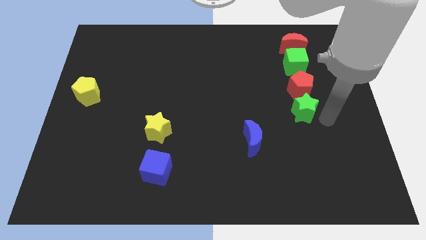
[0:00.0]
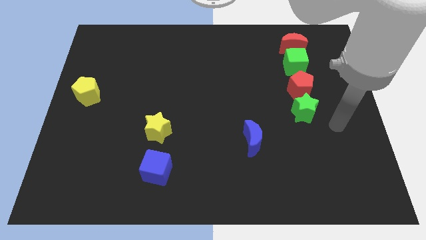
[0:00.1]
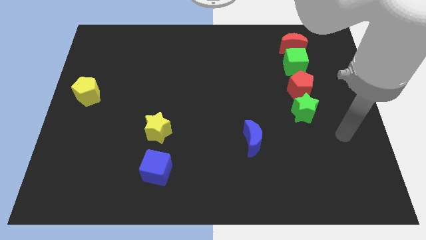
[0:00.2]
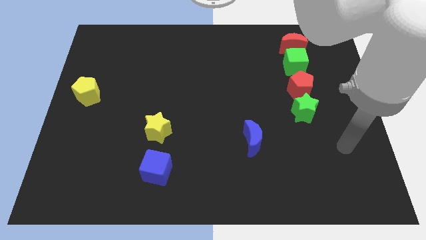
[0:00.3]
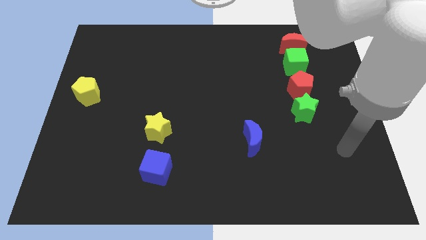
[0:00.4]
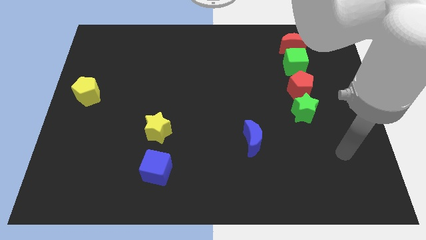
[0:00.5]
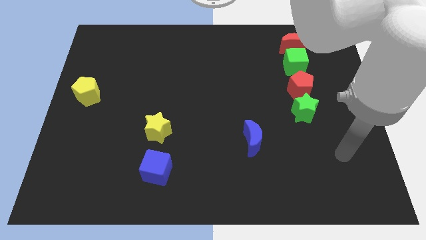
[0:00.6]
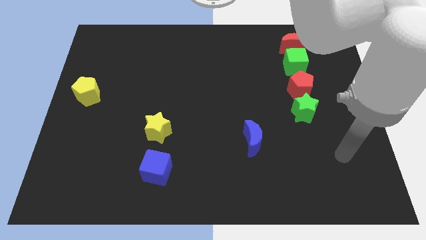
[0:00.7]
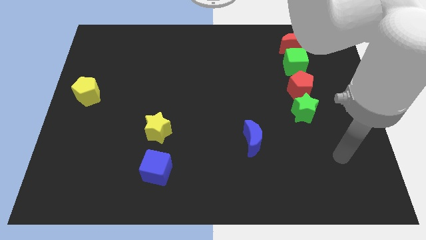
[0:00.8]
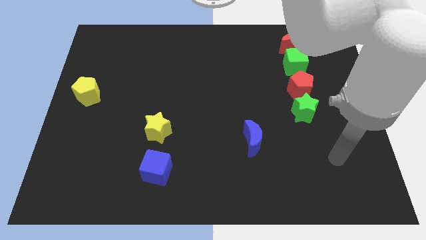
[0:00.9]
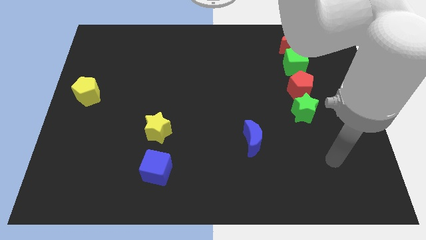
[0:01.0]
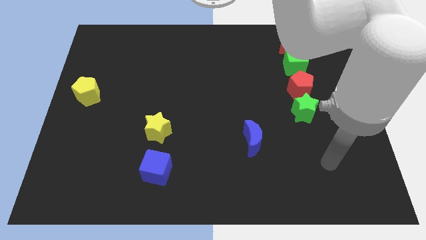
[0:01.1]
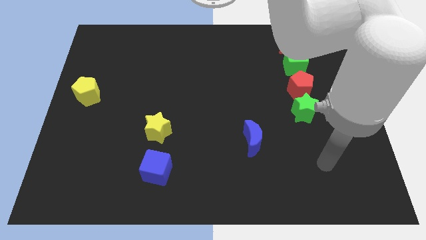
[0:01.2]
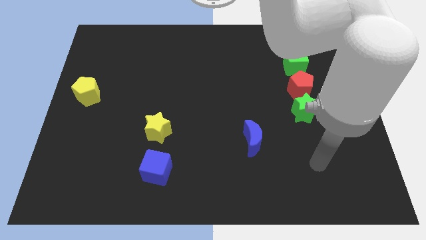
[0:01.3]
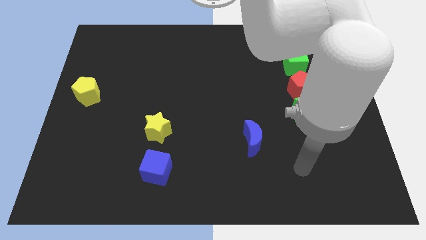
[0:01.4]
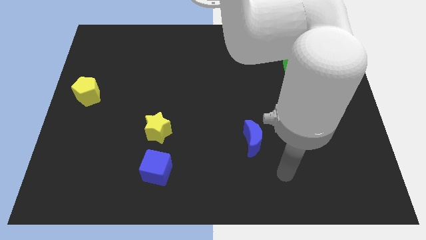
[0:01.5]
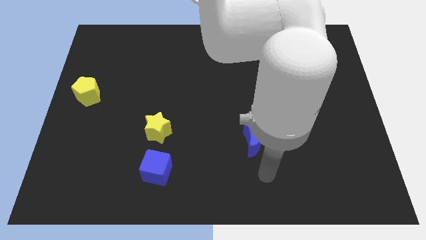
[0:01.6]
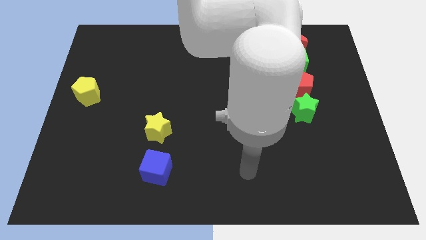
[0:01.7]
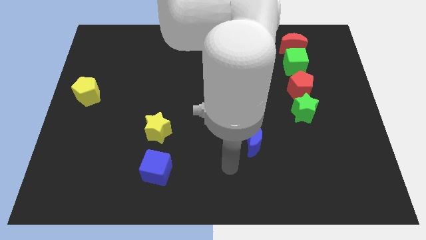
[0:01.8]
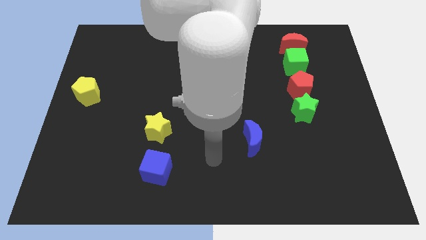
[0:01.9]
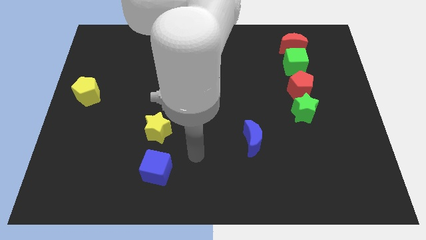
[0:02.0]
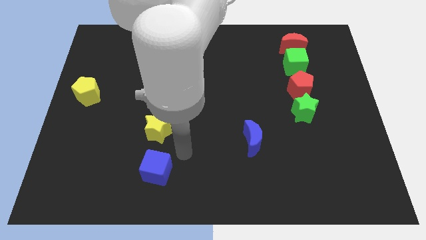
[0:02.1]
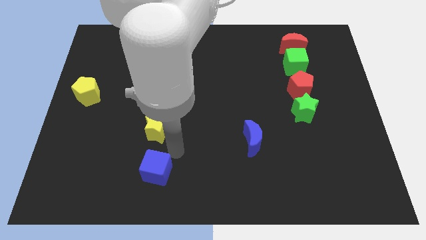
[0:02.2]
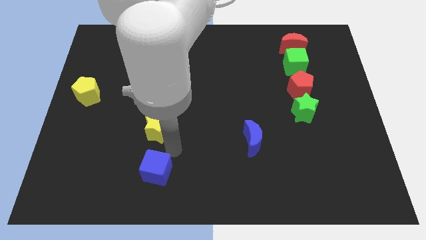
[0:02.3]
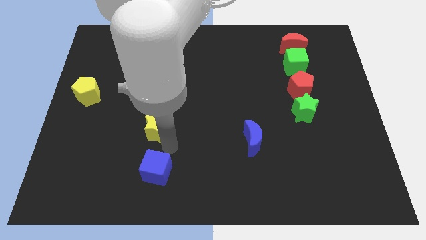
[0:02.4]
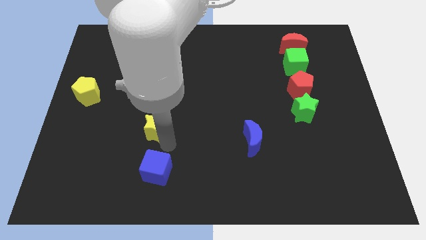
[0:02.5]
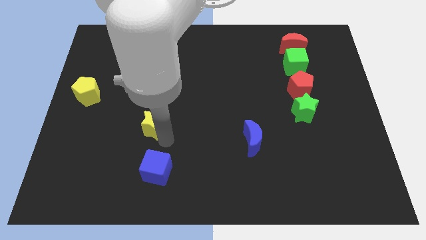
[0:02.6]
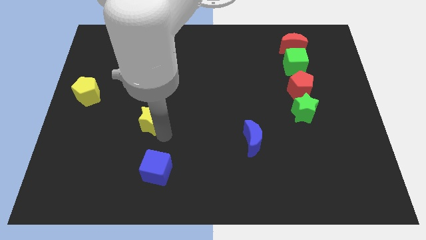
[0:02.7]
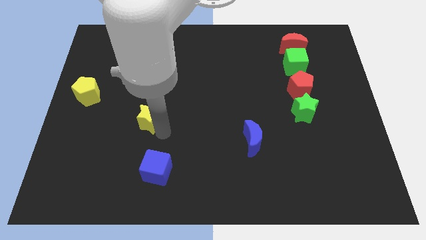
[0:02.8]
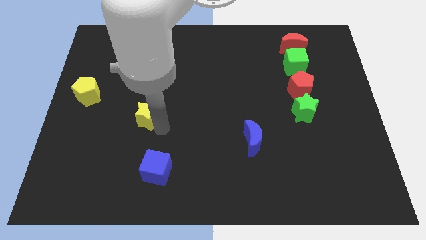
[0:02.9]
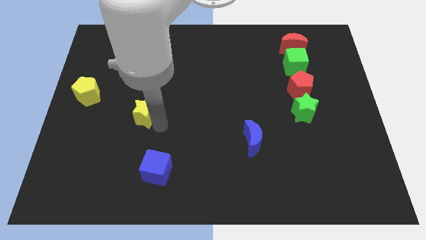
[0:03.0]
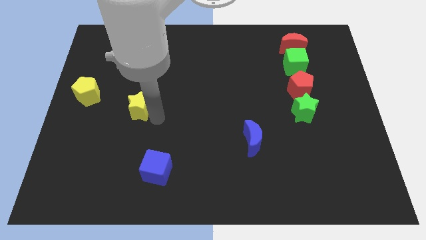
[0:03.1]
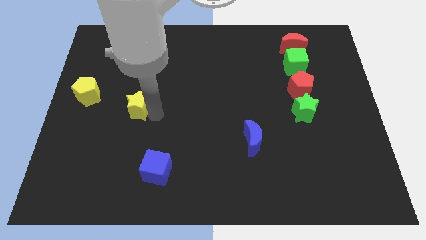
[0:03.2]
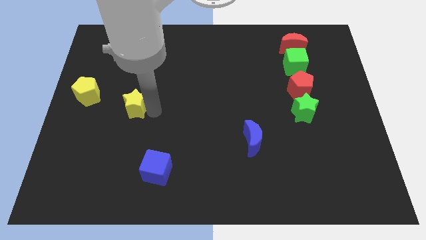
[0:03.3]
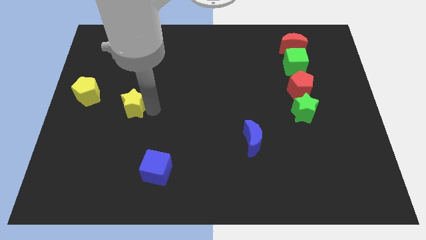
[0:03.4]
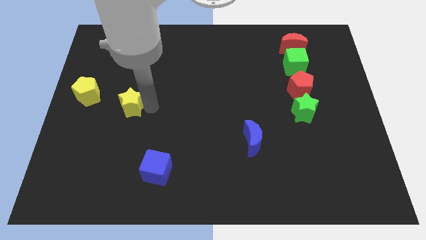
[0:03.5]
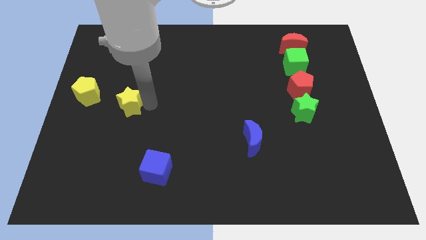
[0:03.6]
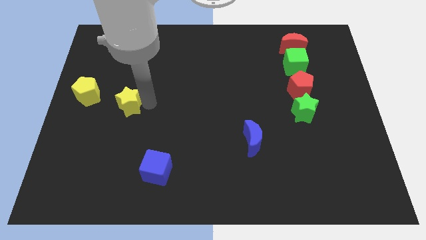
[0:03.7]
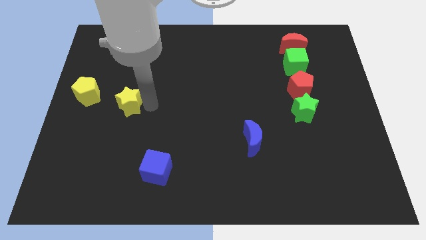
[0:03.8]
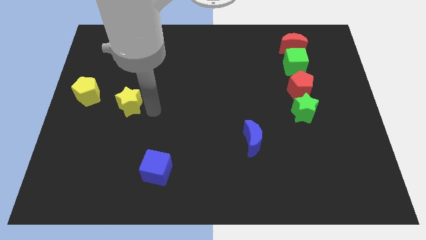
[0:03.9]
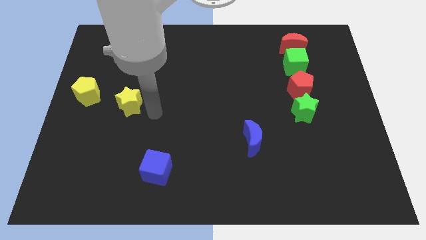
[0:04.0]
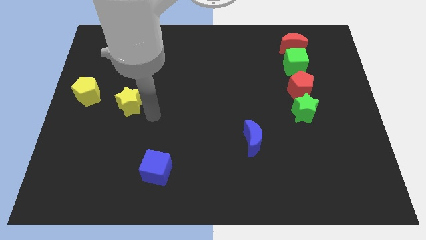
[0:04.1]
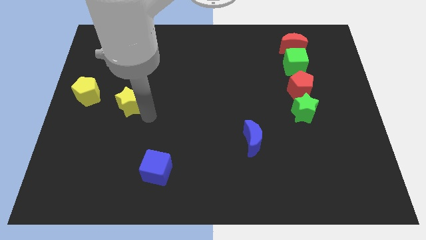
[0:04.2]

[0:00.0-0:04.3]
move the yellow star to the right of the yellow pentagon

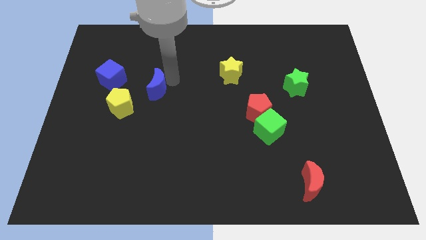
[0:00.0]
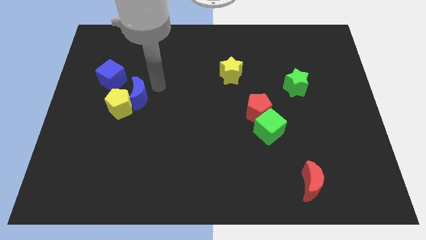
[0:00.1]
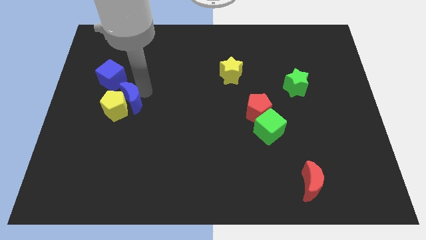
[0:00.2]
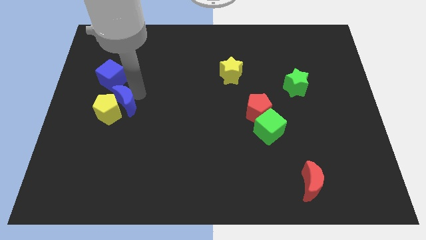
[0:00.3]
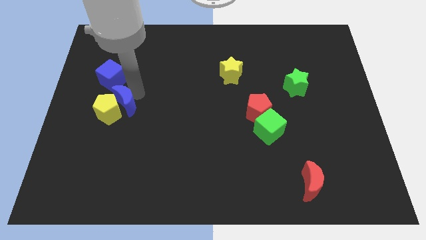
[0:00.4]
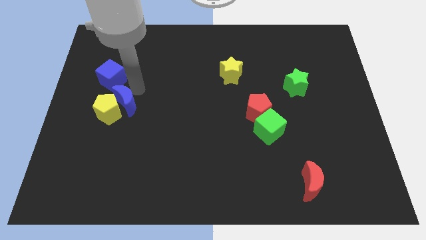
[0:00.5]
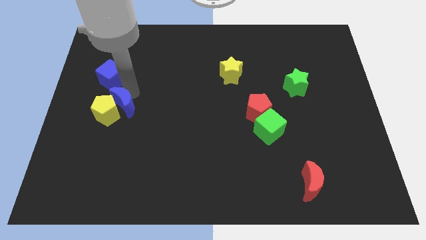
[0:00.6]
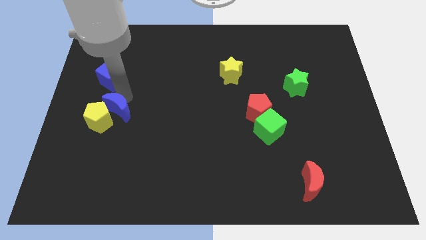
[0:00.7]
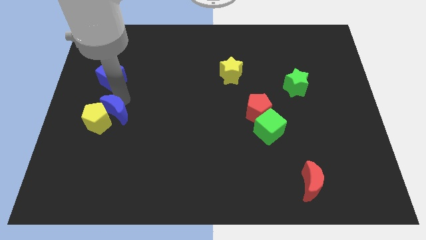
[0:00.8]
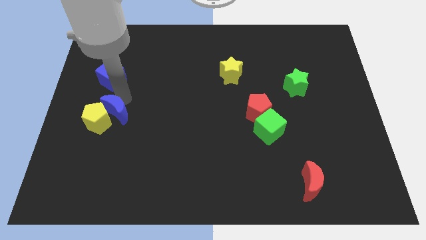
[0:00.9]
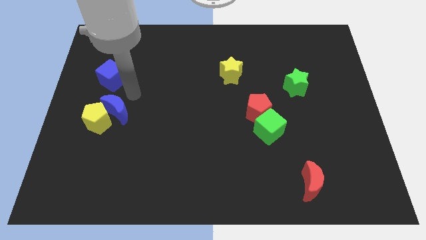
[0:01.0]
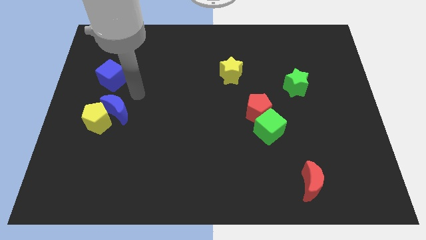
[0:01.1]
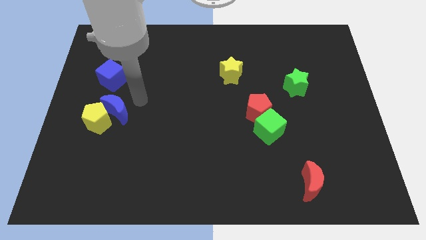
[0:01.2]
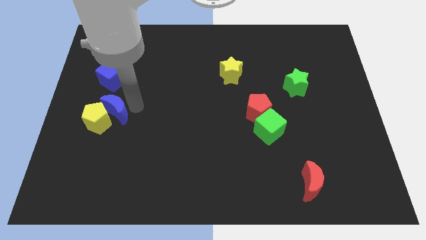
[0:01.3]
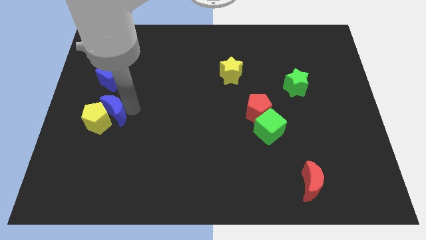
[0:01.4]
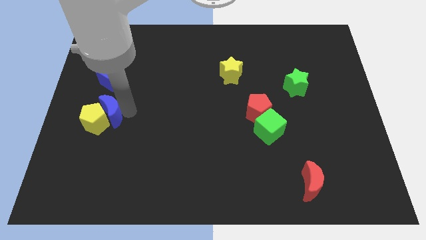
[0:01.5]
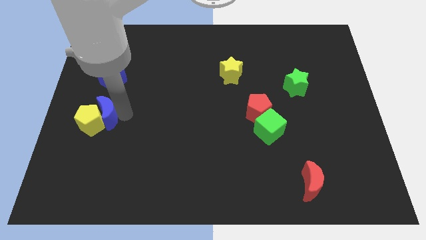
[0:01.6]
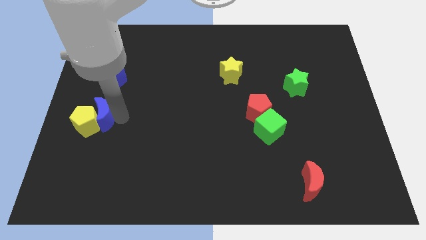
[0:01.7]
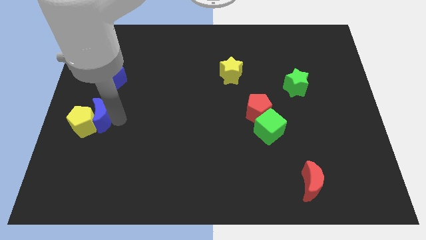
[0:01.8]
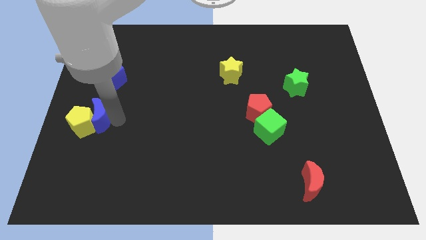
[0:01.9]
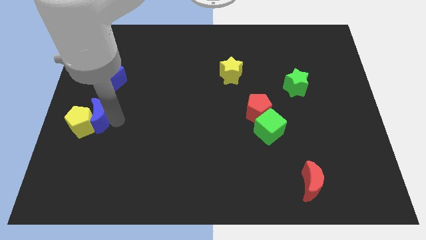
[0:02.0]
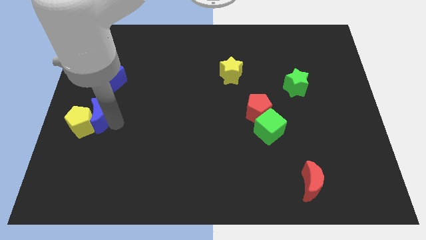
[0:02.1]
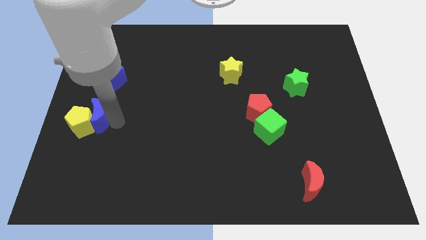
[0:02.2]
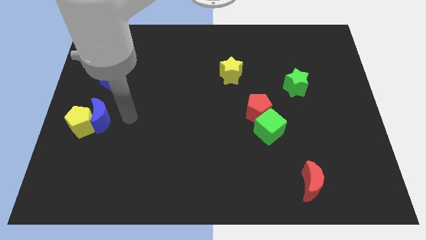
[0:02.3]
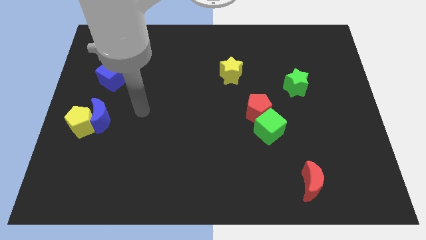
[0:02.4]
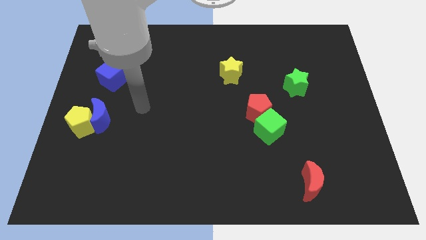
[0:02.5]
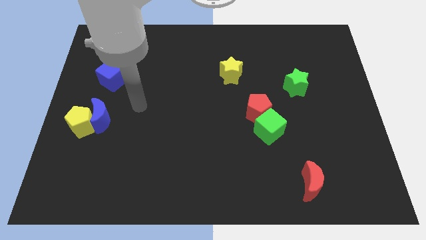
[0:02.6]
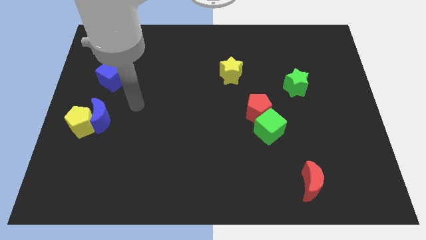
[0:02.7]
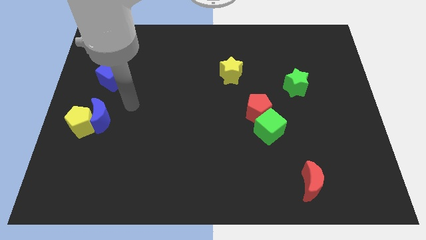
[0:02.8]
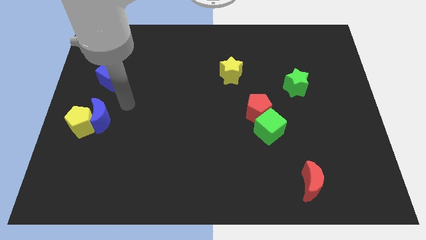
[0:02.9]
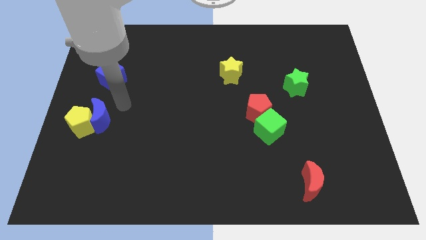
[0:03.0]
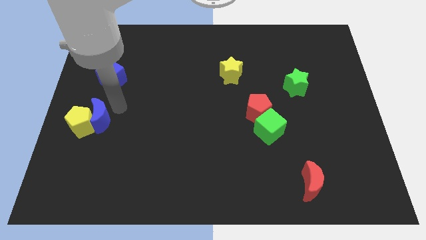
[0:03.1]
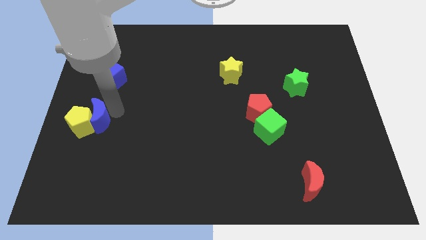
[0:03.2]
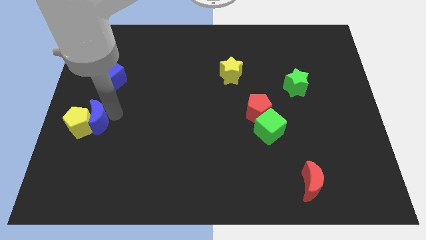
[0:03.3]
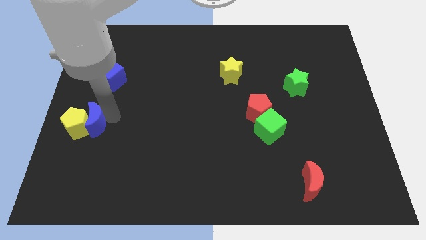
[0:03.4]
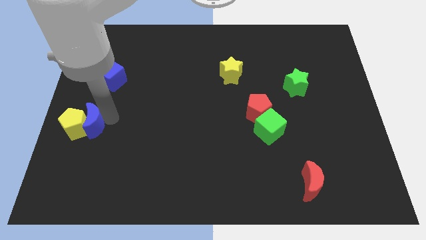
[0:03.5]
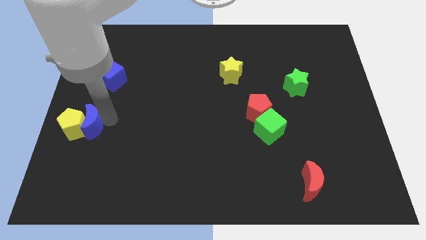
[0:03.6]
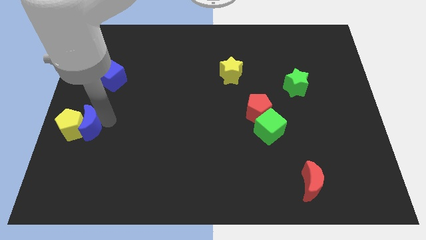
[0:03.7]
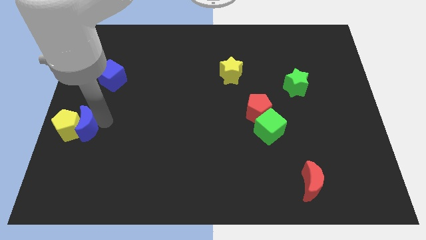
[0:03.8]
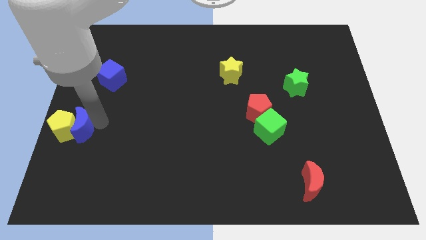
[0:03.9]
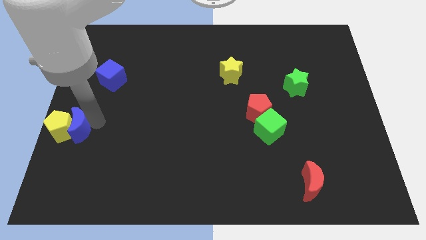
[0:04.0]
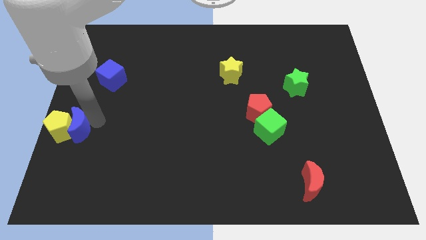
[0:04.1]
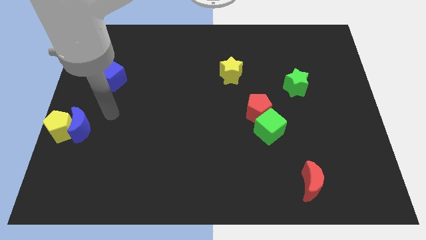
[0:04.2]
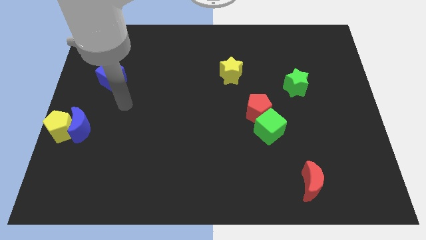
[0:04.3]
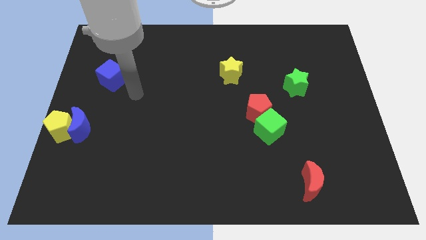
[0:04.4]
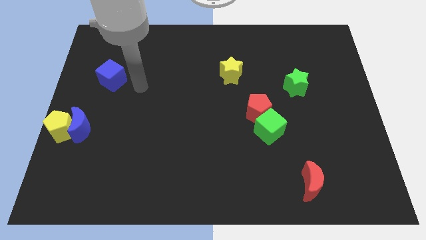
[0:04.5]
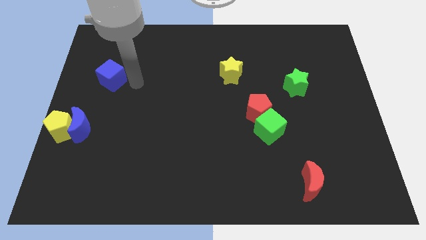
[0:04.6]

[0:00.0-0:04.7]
place the yellow pentagon and blue crescent together at the center left side of the board
